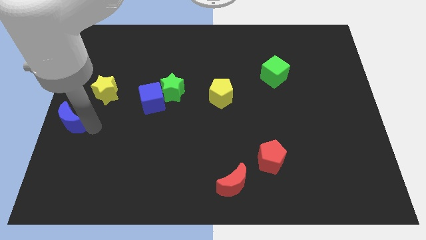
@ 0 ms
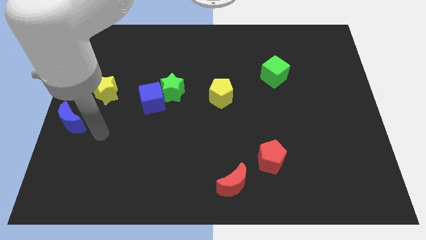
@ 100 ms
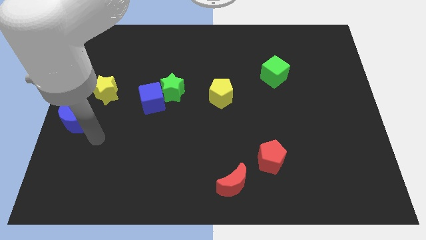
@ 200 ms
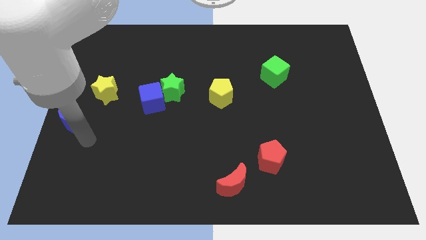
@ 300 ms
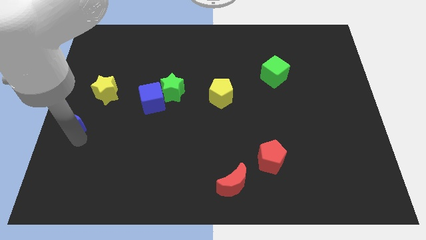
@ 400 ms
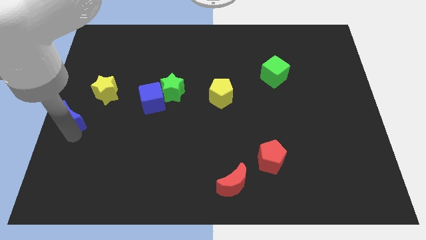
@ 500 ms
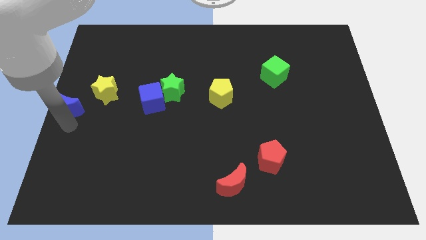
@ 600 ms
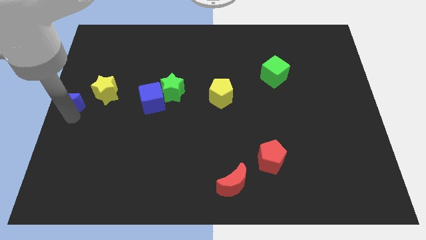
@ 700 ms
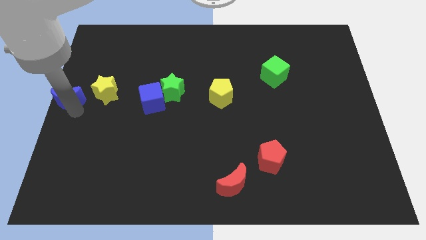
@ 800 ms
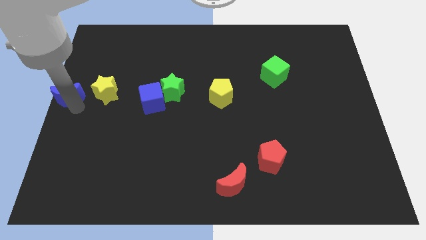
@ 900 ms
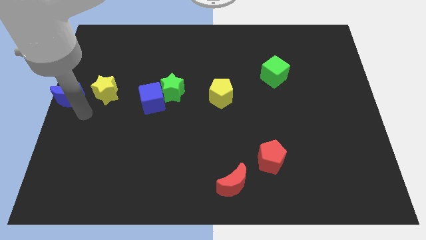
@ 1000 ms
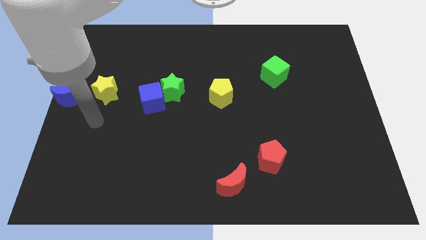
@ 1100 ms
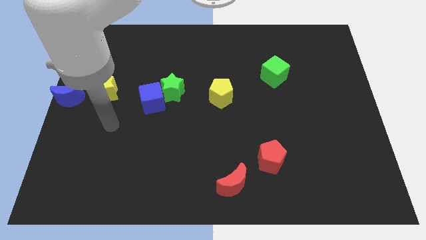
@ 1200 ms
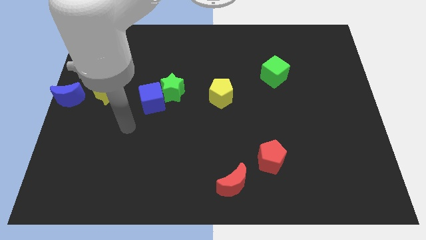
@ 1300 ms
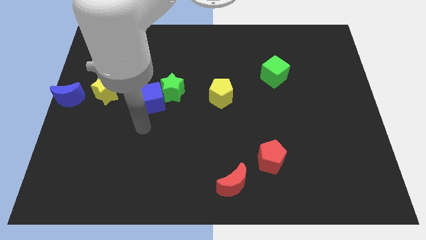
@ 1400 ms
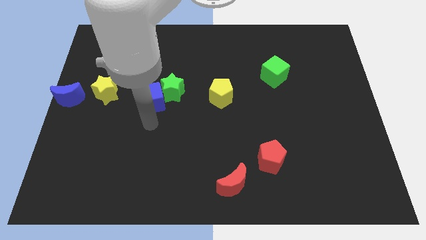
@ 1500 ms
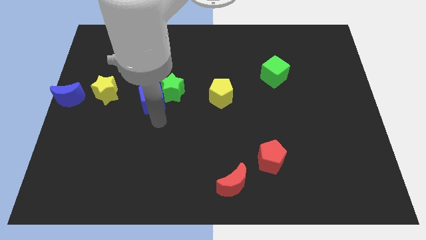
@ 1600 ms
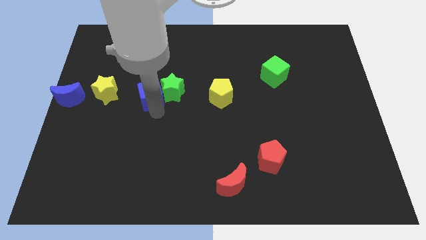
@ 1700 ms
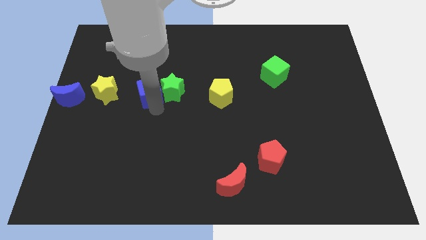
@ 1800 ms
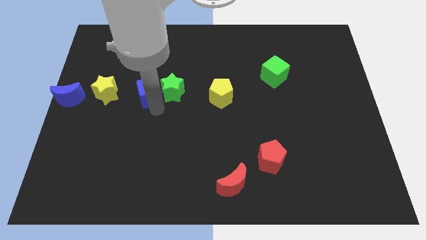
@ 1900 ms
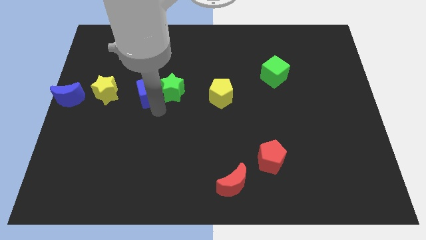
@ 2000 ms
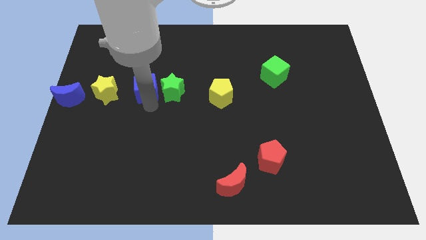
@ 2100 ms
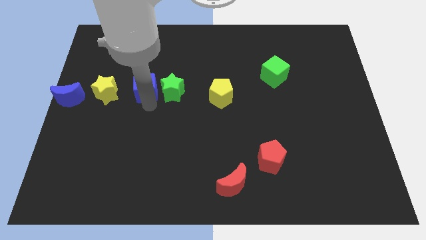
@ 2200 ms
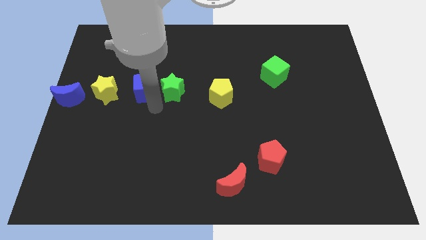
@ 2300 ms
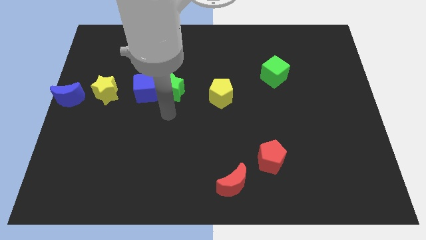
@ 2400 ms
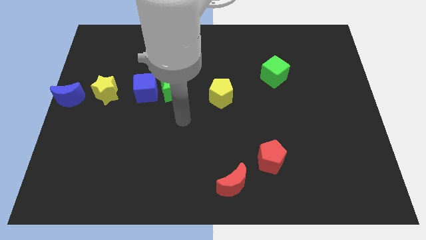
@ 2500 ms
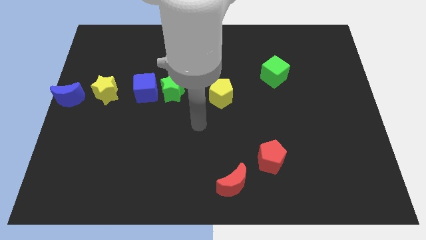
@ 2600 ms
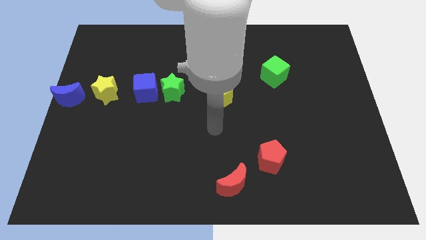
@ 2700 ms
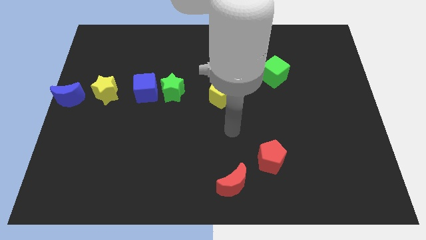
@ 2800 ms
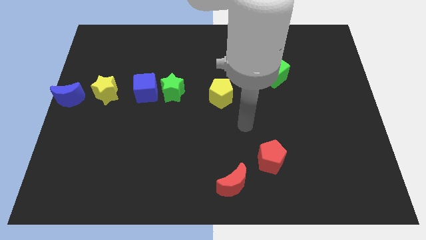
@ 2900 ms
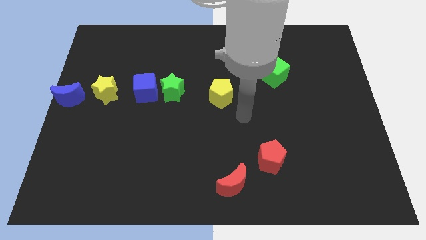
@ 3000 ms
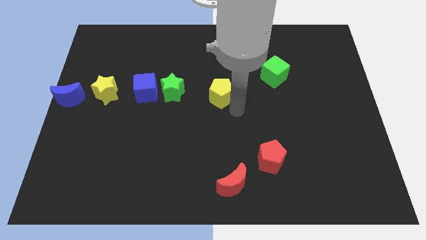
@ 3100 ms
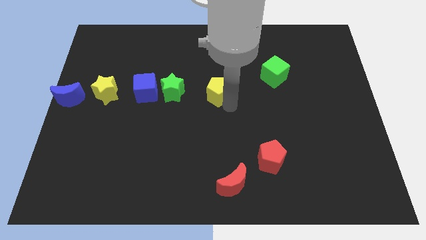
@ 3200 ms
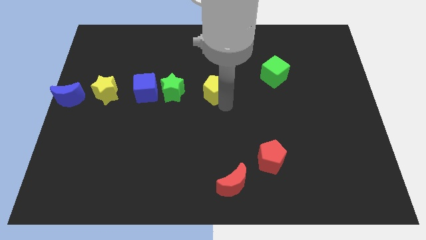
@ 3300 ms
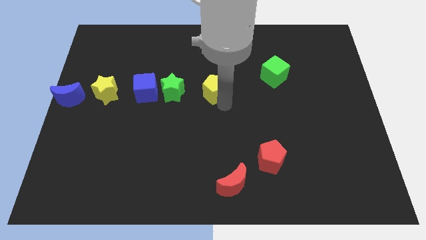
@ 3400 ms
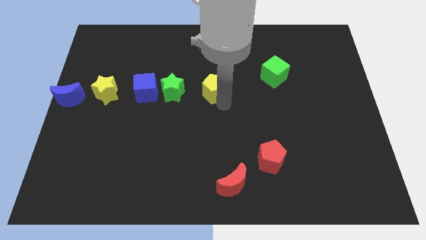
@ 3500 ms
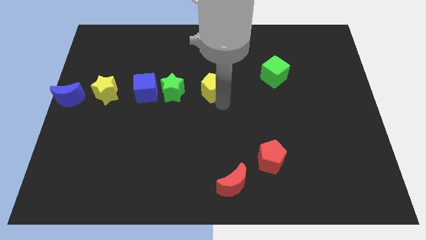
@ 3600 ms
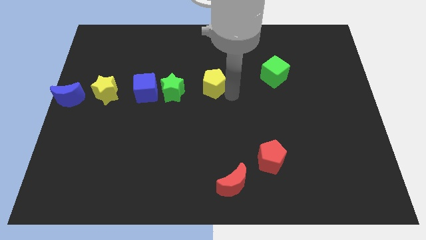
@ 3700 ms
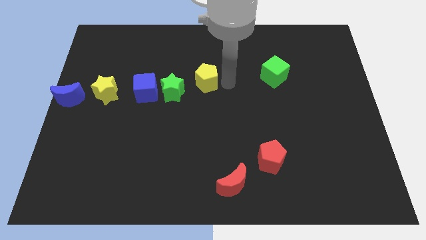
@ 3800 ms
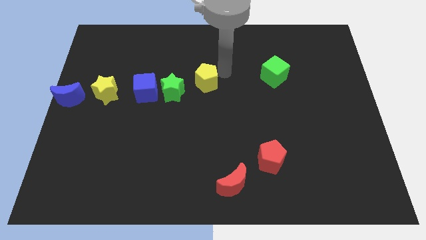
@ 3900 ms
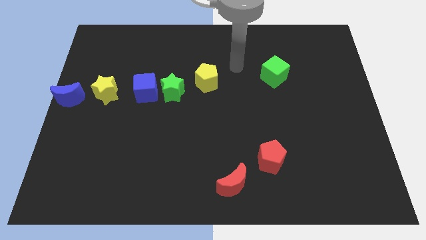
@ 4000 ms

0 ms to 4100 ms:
slightly push the blue blocks and yellow pentagon towards up

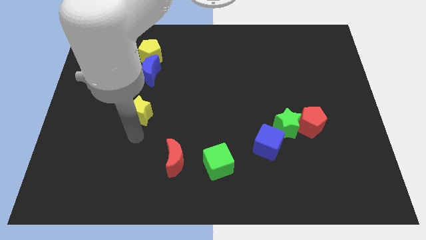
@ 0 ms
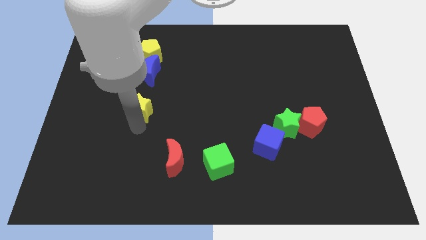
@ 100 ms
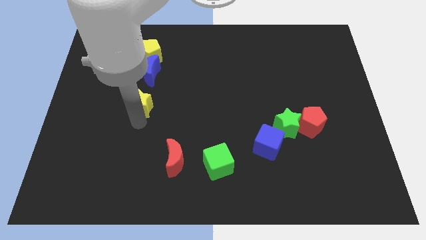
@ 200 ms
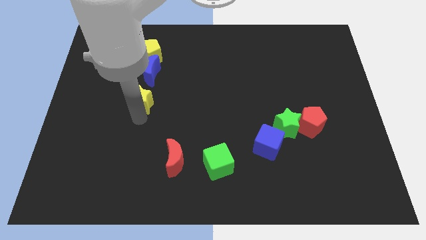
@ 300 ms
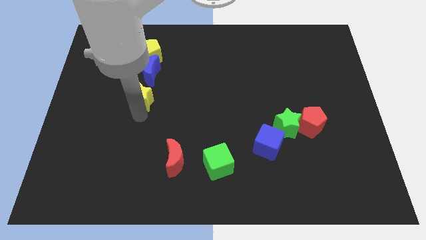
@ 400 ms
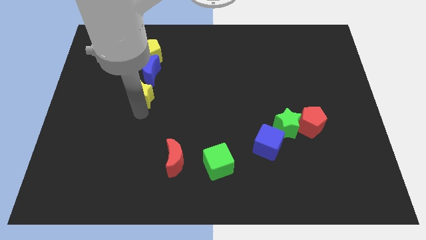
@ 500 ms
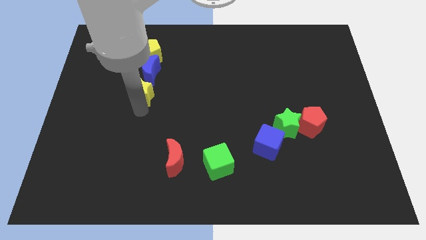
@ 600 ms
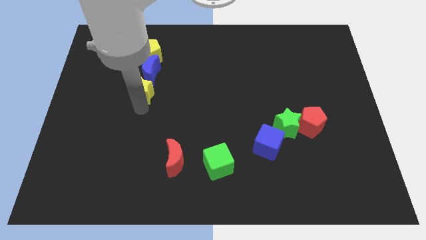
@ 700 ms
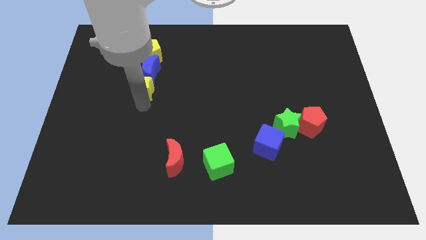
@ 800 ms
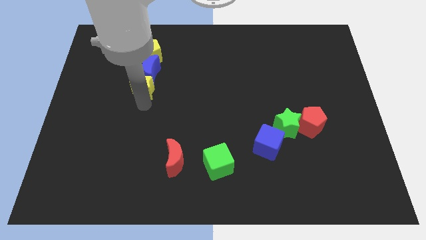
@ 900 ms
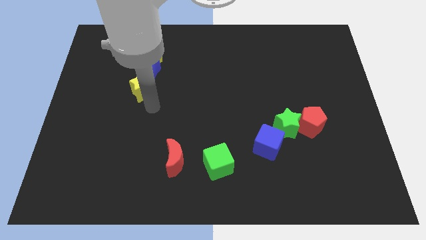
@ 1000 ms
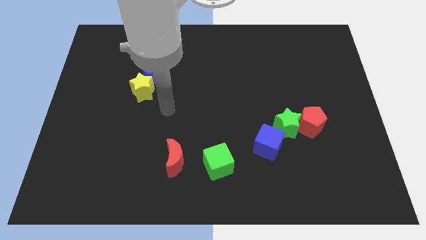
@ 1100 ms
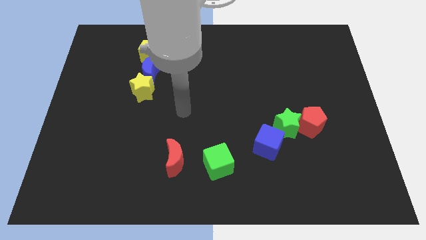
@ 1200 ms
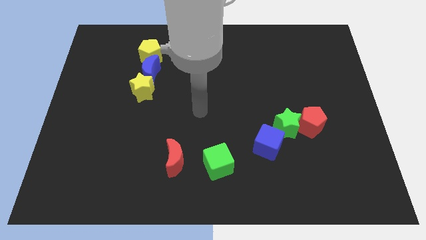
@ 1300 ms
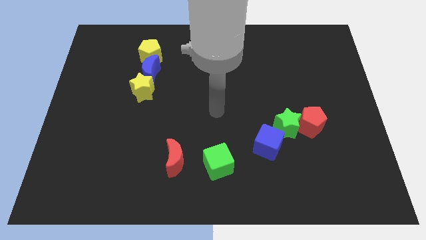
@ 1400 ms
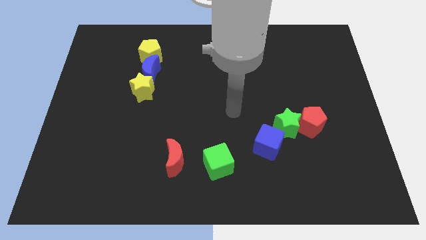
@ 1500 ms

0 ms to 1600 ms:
push the yellow star below the blue moon

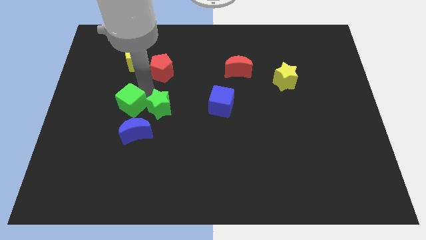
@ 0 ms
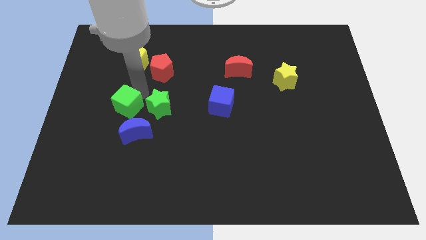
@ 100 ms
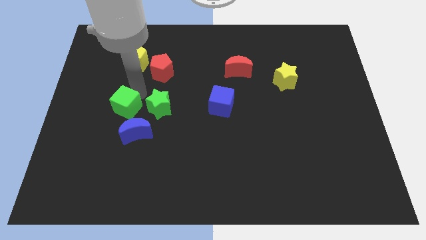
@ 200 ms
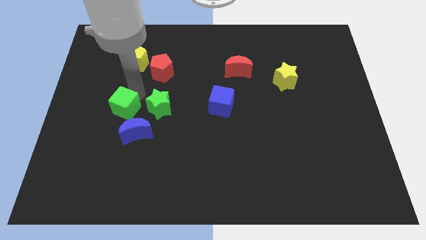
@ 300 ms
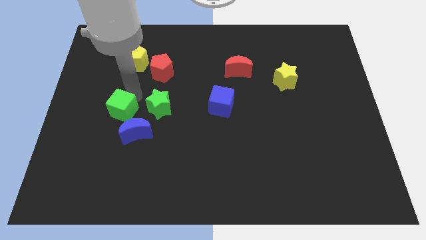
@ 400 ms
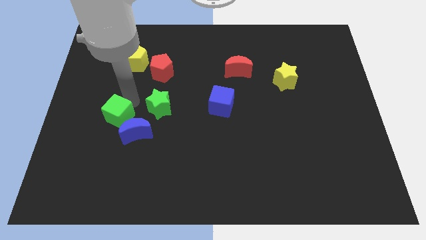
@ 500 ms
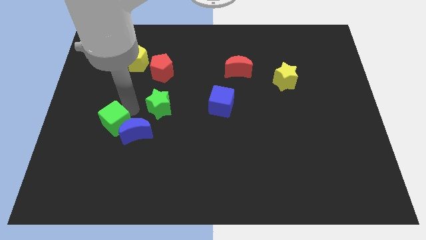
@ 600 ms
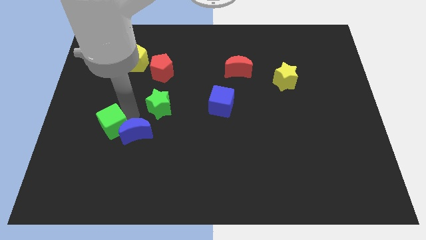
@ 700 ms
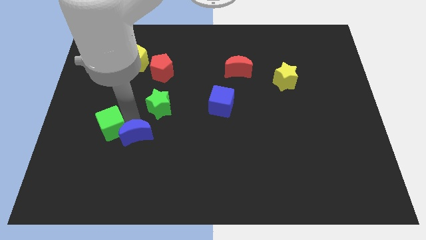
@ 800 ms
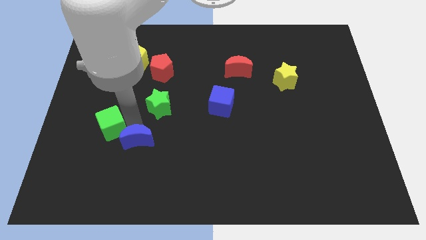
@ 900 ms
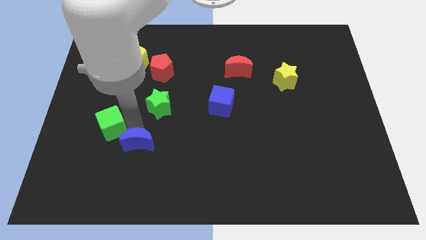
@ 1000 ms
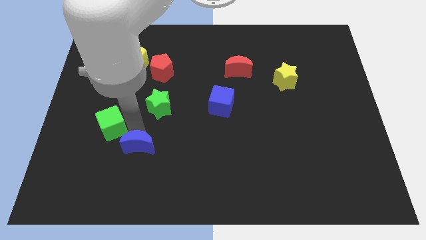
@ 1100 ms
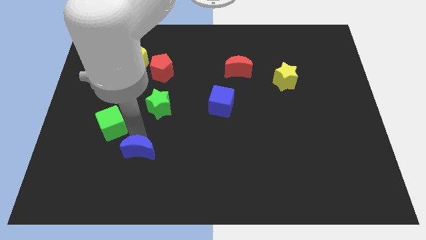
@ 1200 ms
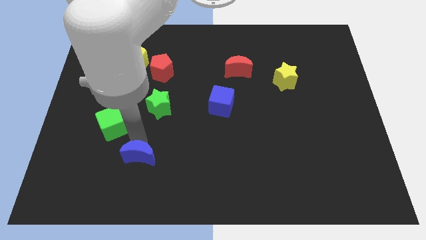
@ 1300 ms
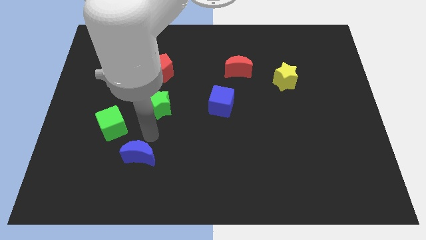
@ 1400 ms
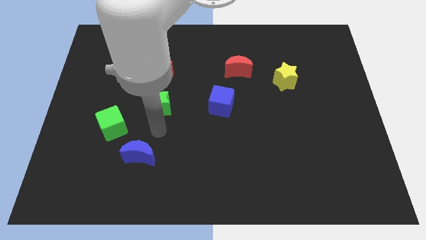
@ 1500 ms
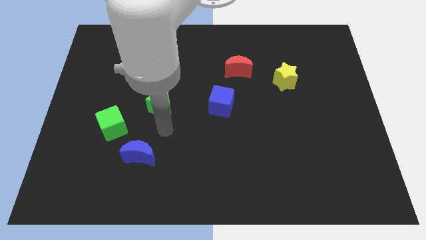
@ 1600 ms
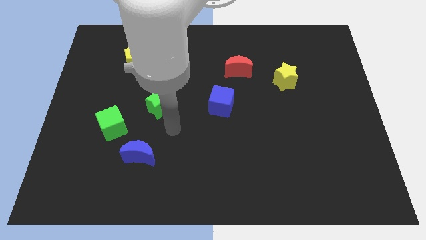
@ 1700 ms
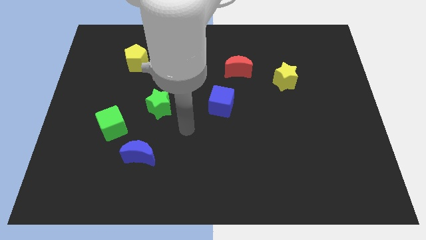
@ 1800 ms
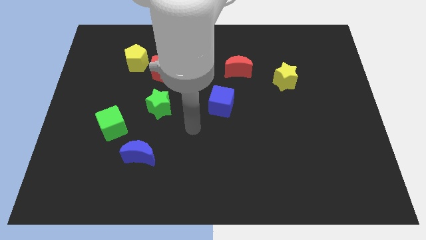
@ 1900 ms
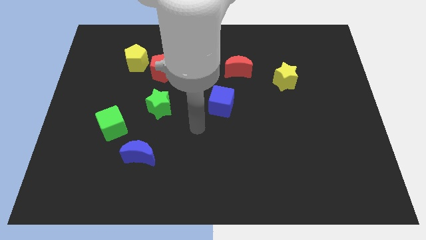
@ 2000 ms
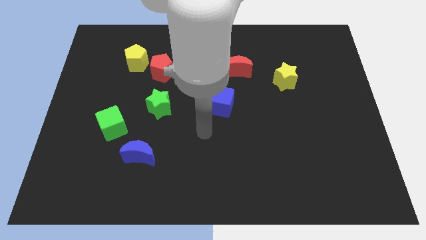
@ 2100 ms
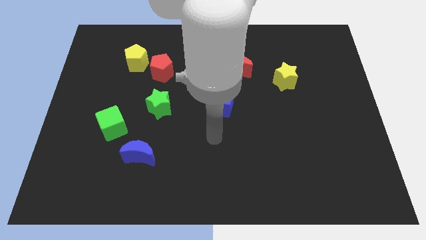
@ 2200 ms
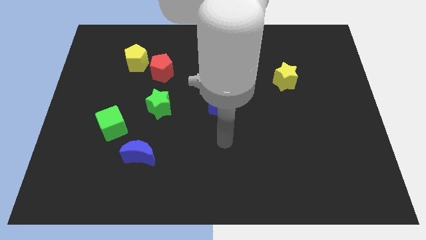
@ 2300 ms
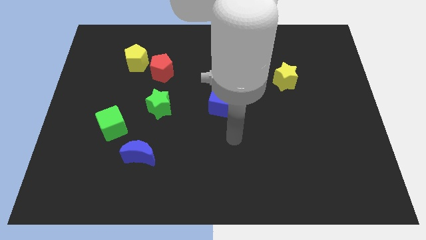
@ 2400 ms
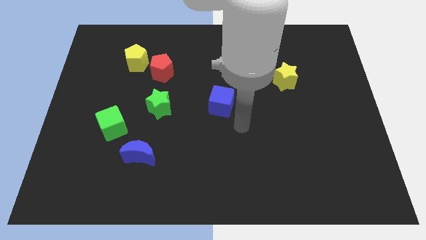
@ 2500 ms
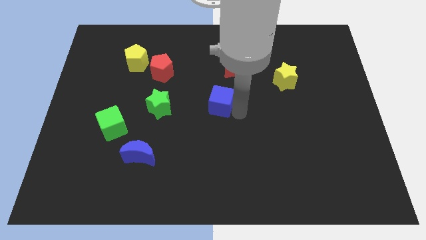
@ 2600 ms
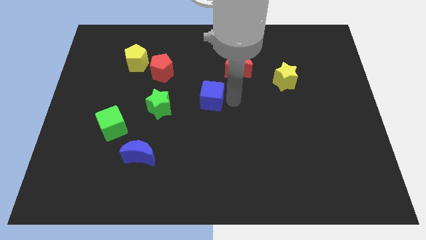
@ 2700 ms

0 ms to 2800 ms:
move the blue cube towards the center

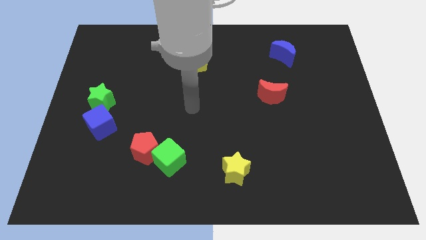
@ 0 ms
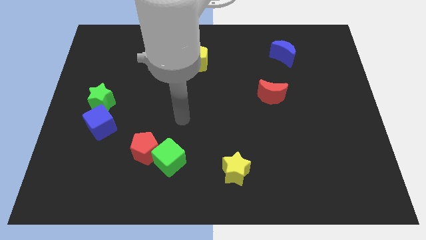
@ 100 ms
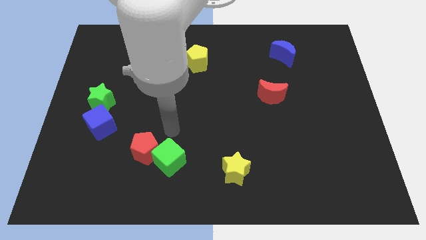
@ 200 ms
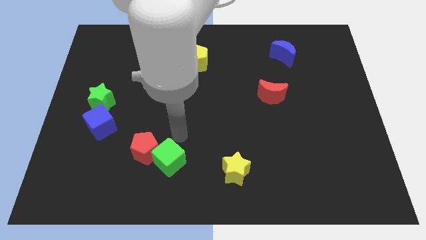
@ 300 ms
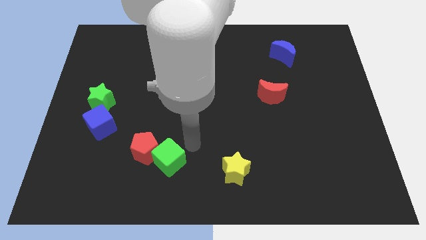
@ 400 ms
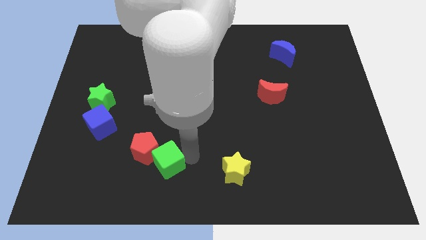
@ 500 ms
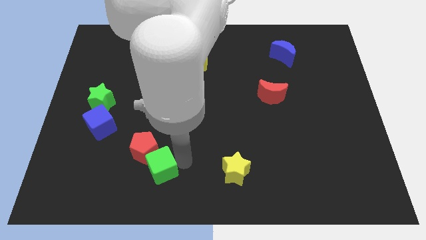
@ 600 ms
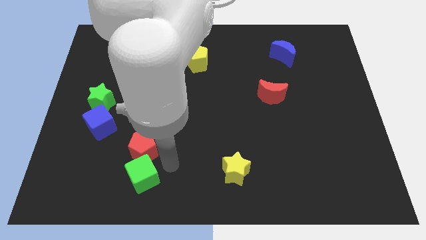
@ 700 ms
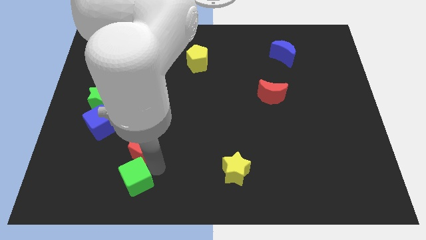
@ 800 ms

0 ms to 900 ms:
move the green cube below the red pentagon
